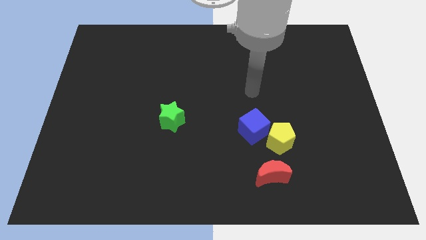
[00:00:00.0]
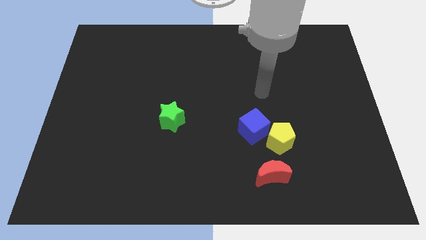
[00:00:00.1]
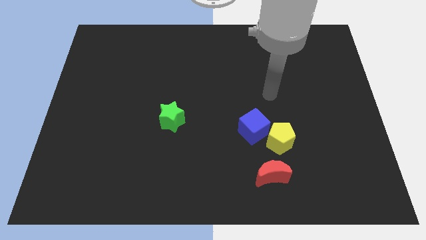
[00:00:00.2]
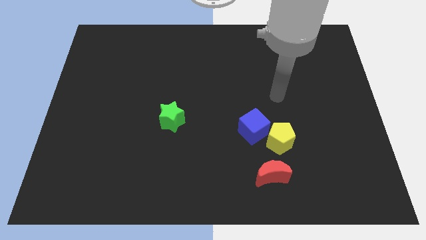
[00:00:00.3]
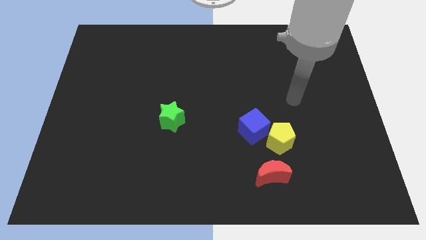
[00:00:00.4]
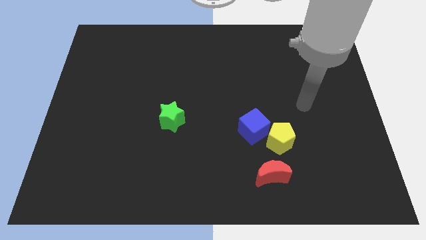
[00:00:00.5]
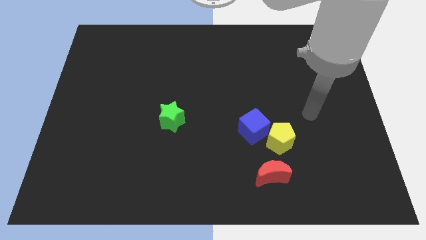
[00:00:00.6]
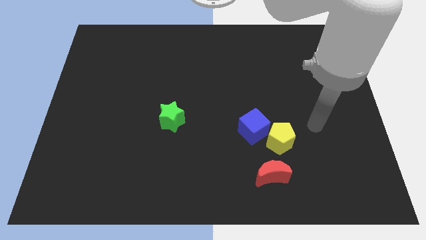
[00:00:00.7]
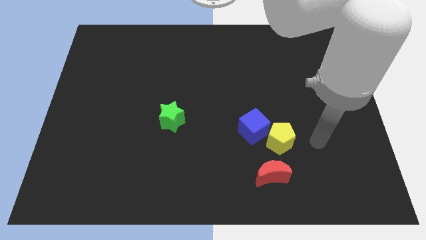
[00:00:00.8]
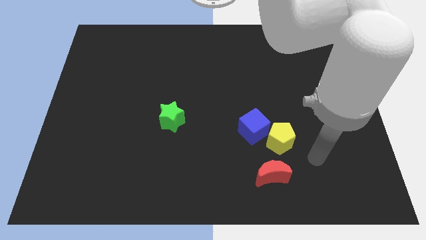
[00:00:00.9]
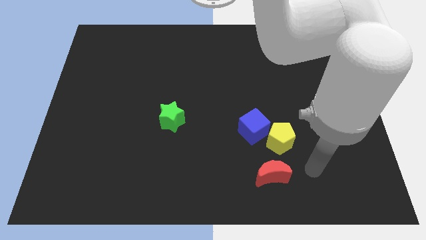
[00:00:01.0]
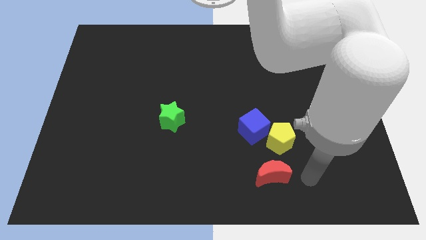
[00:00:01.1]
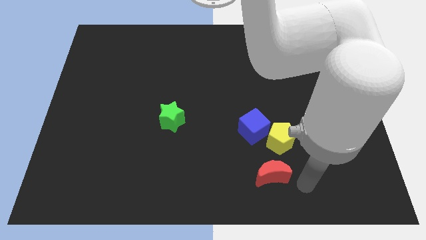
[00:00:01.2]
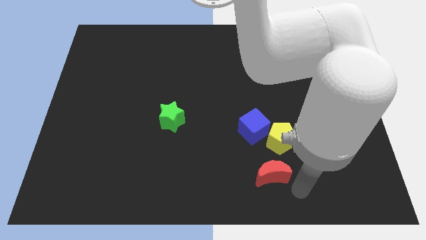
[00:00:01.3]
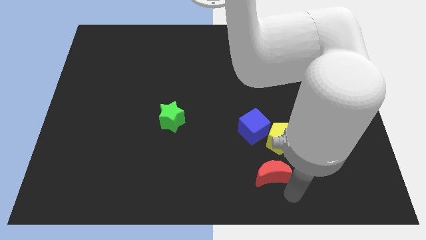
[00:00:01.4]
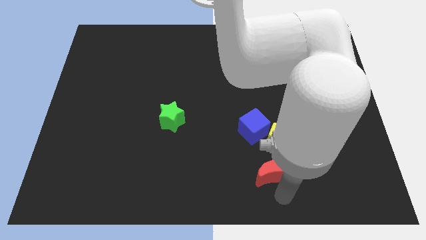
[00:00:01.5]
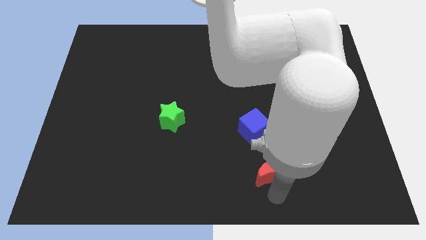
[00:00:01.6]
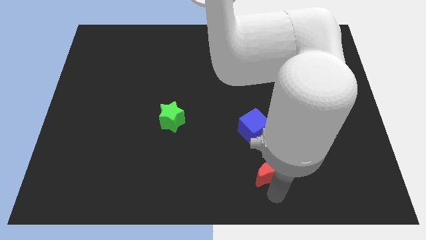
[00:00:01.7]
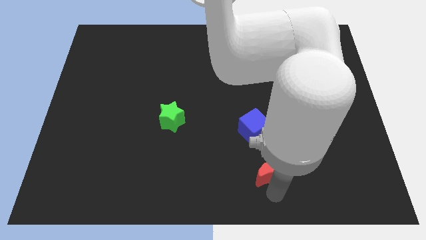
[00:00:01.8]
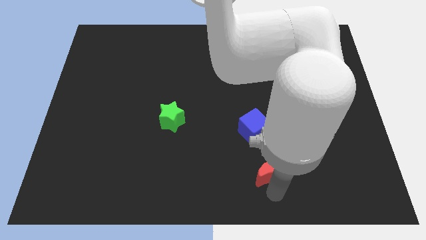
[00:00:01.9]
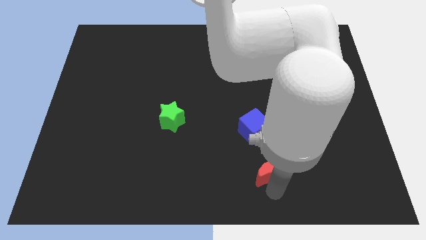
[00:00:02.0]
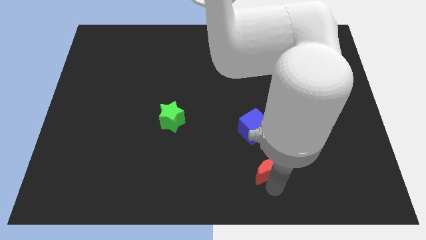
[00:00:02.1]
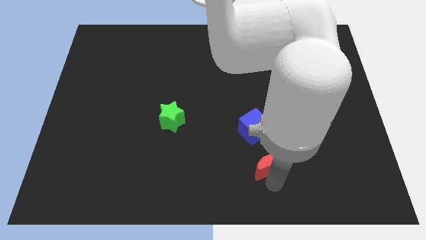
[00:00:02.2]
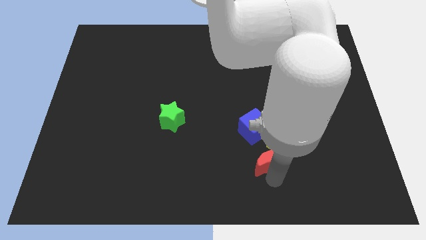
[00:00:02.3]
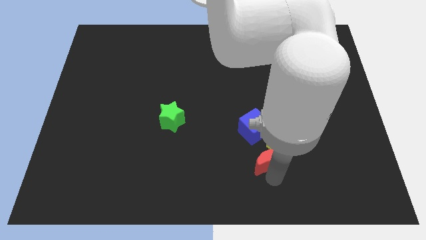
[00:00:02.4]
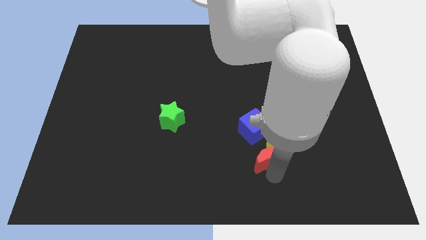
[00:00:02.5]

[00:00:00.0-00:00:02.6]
move the red moon close to the pentagon

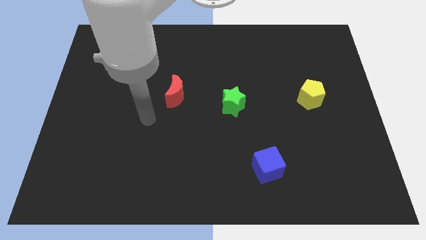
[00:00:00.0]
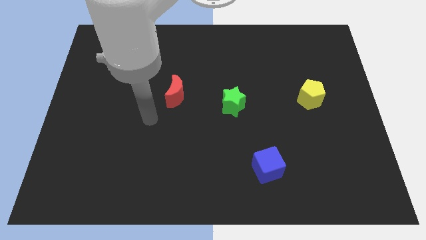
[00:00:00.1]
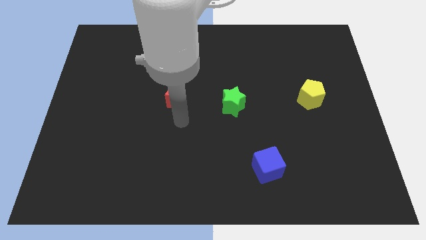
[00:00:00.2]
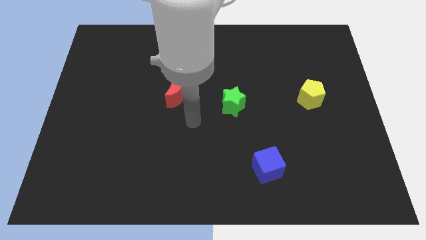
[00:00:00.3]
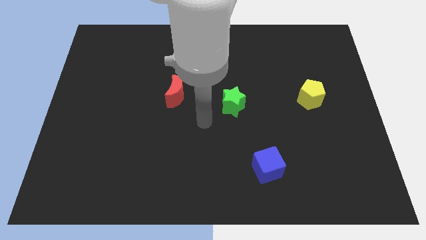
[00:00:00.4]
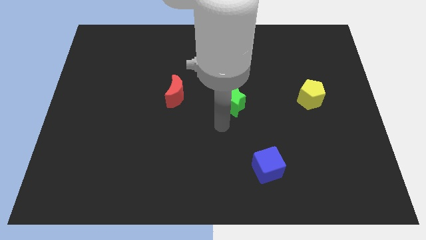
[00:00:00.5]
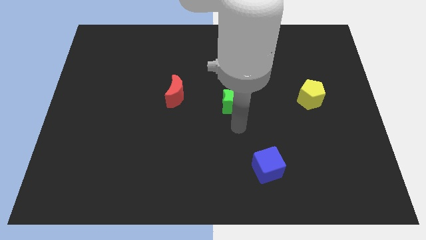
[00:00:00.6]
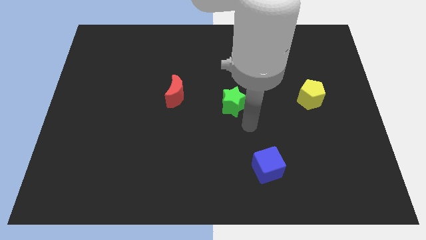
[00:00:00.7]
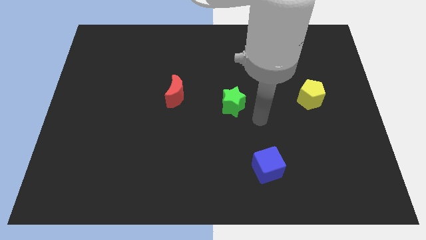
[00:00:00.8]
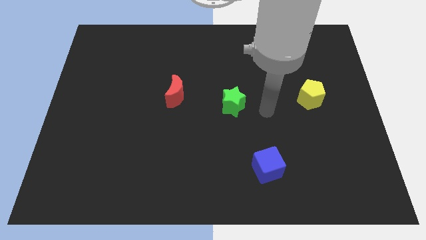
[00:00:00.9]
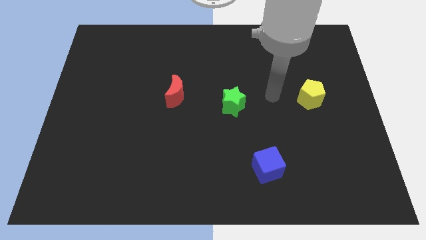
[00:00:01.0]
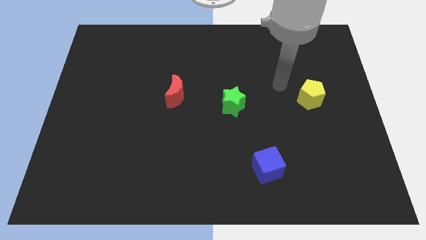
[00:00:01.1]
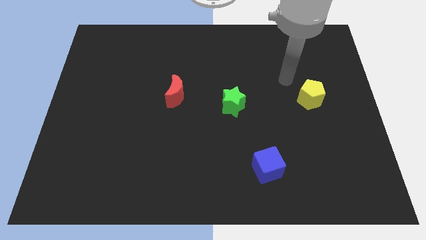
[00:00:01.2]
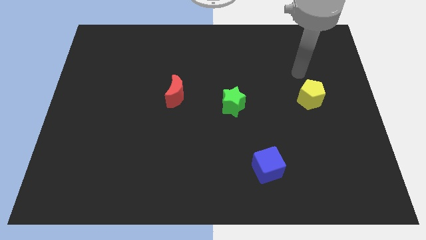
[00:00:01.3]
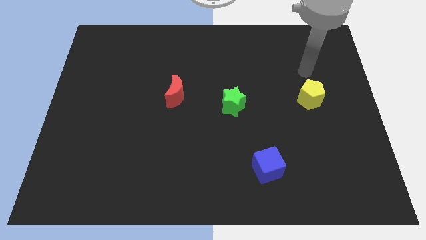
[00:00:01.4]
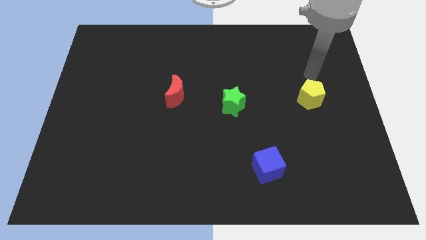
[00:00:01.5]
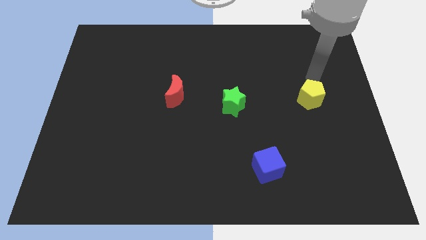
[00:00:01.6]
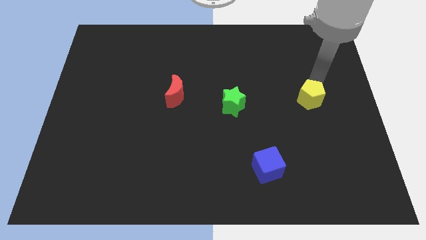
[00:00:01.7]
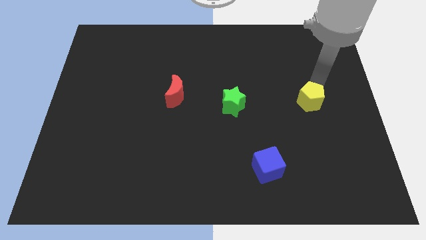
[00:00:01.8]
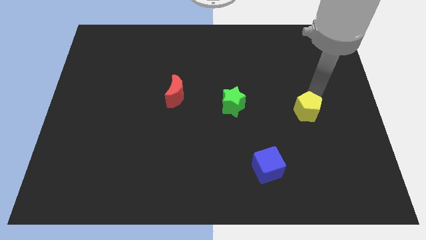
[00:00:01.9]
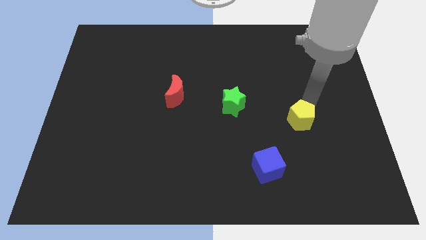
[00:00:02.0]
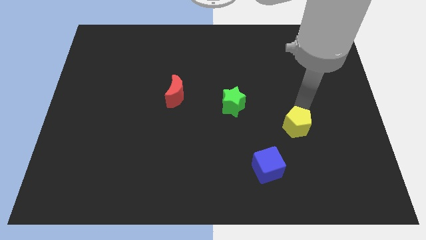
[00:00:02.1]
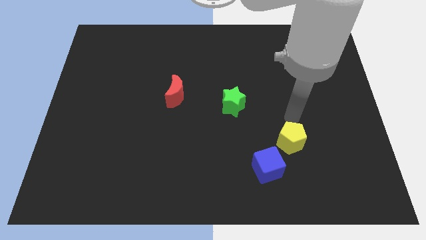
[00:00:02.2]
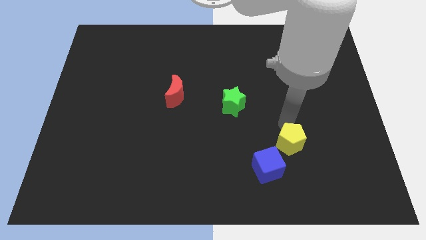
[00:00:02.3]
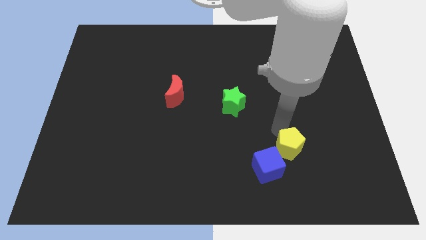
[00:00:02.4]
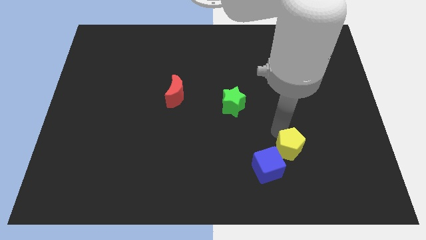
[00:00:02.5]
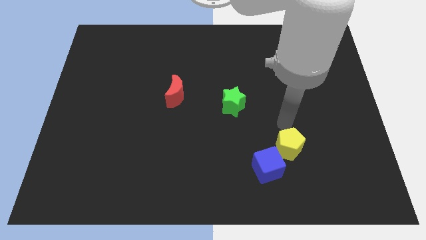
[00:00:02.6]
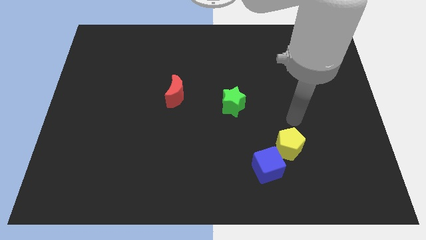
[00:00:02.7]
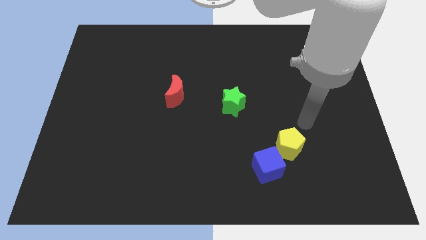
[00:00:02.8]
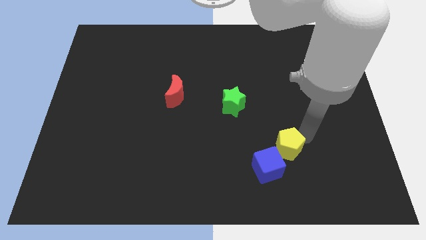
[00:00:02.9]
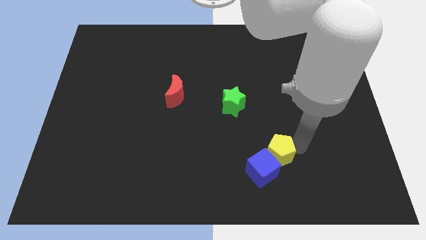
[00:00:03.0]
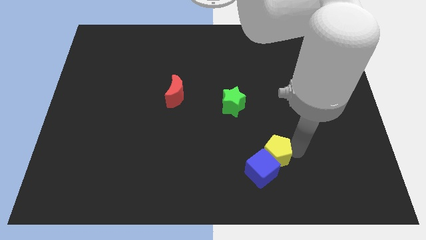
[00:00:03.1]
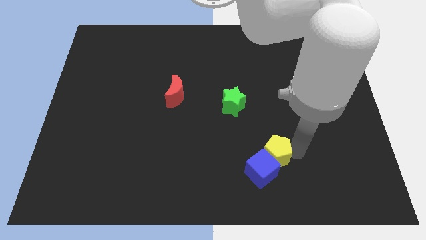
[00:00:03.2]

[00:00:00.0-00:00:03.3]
slide the pentagon close to the blue block

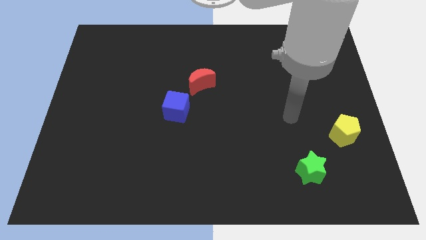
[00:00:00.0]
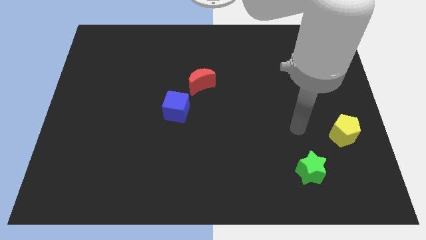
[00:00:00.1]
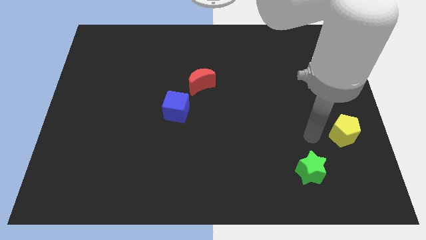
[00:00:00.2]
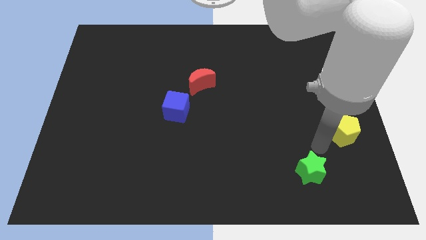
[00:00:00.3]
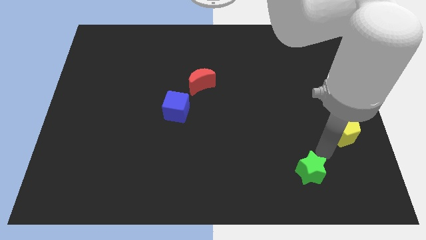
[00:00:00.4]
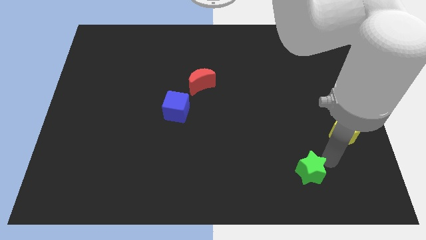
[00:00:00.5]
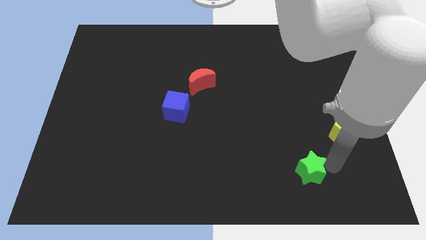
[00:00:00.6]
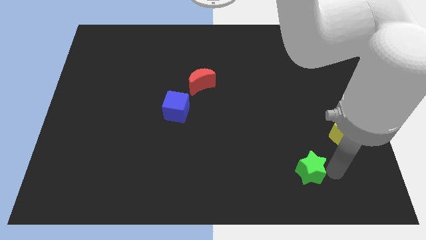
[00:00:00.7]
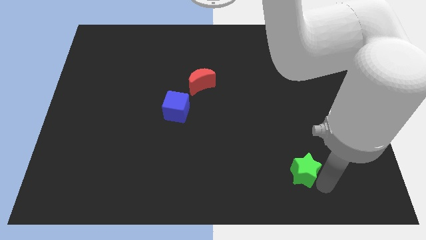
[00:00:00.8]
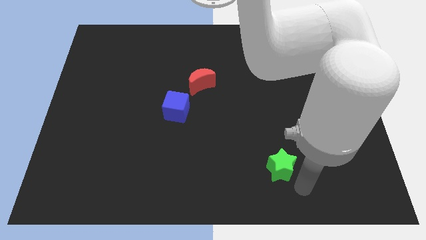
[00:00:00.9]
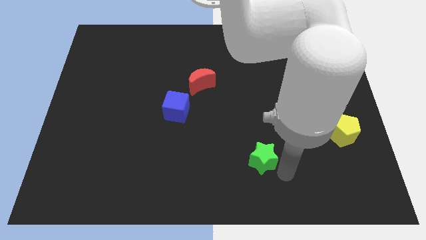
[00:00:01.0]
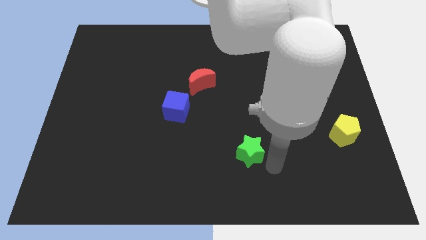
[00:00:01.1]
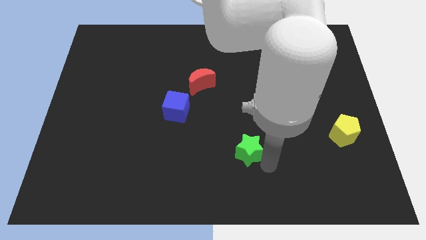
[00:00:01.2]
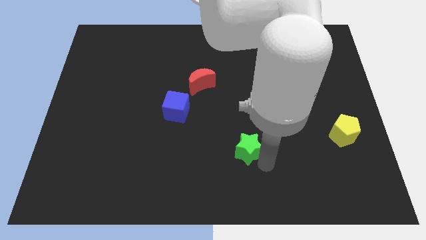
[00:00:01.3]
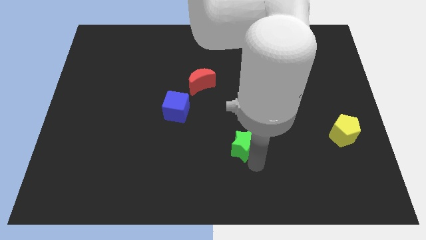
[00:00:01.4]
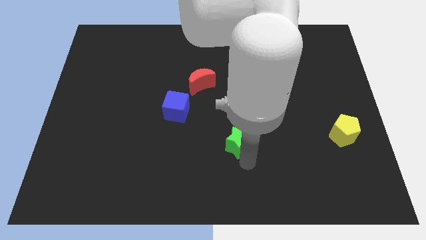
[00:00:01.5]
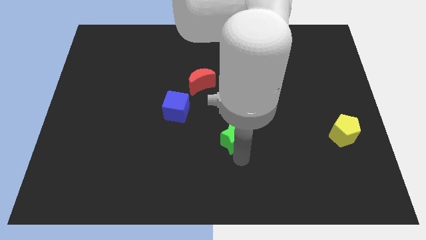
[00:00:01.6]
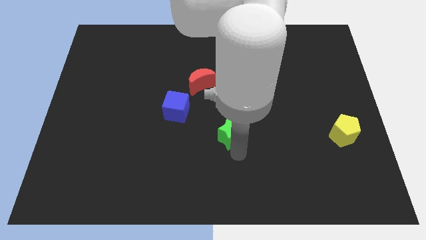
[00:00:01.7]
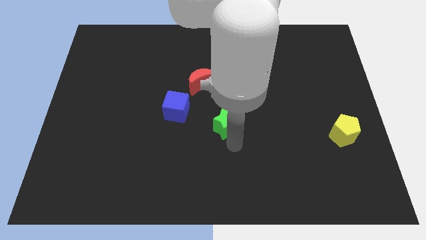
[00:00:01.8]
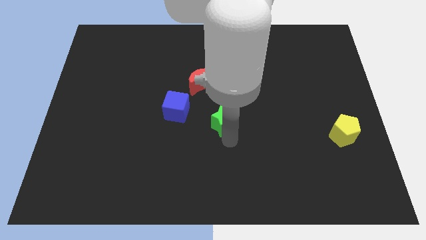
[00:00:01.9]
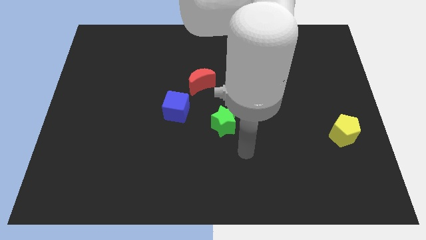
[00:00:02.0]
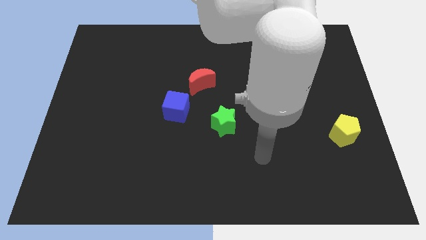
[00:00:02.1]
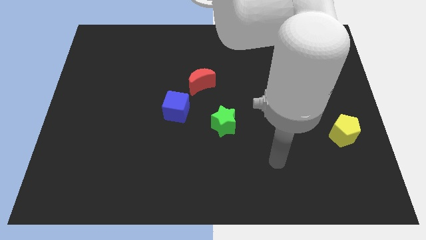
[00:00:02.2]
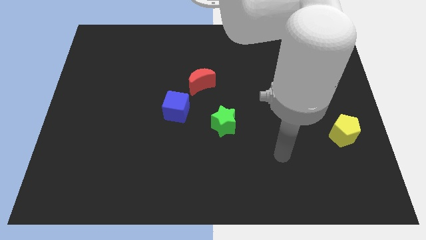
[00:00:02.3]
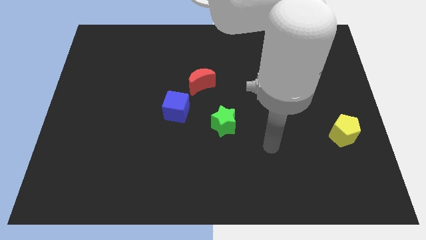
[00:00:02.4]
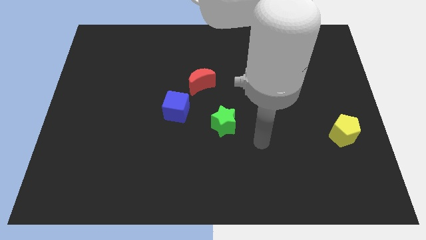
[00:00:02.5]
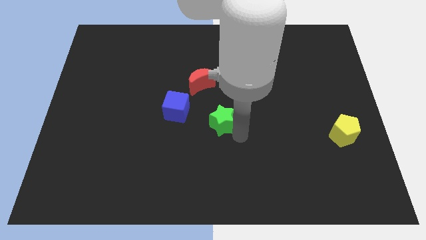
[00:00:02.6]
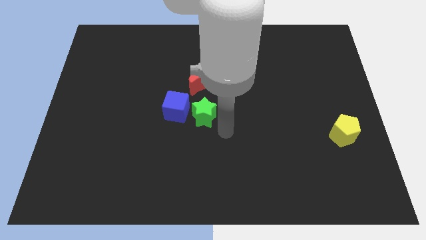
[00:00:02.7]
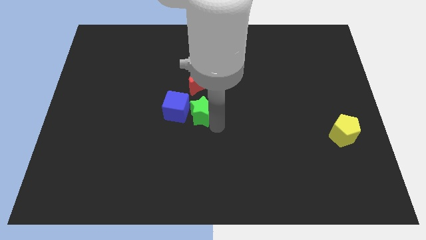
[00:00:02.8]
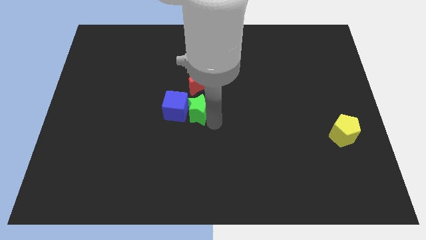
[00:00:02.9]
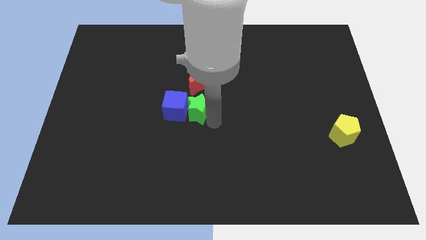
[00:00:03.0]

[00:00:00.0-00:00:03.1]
push the green block close to the blue cube
